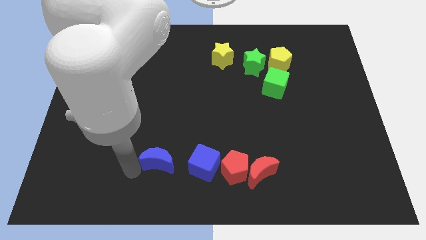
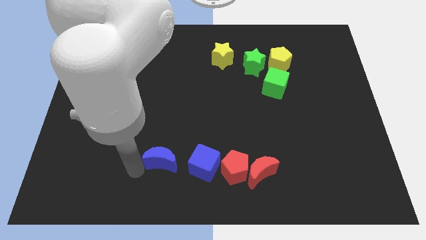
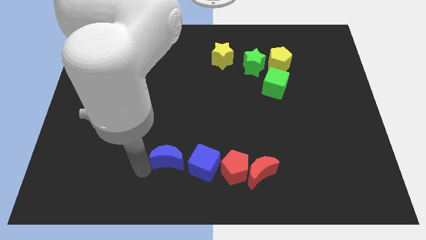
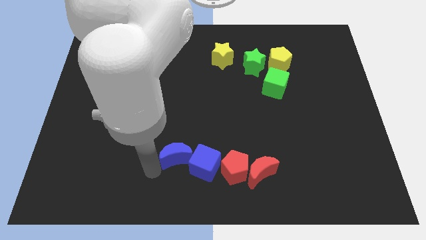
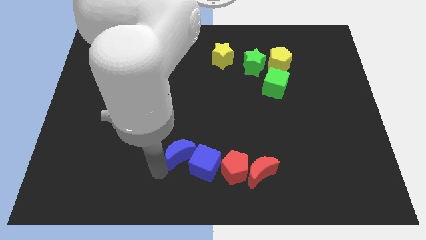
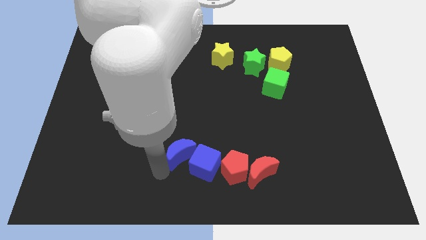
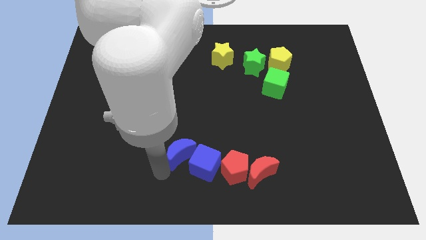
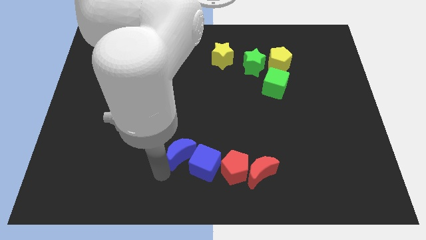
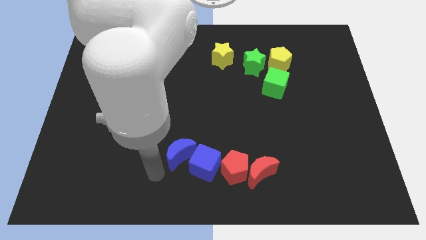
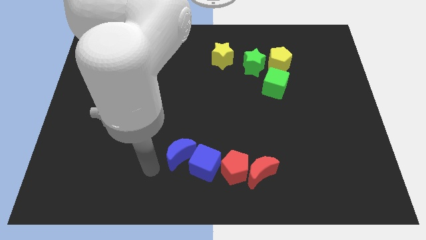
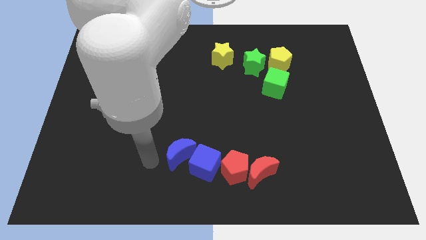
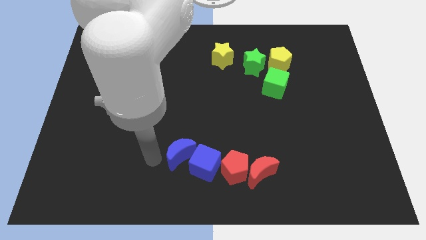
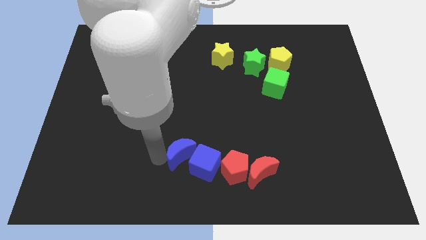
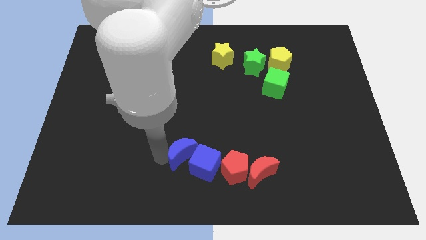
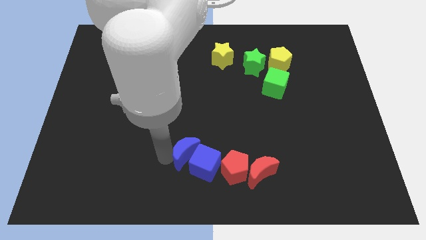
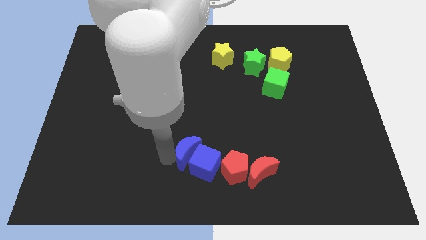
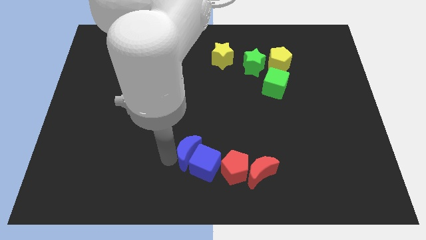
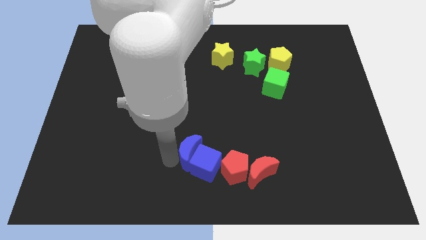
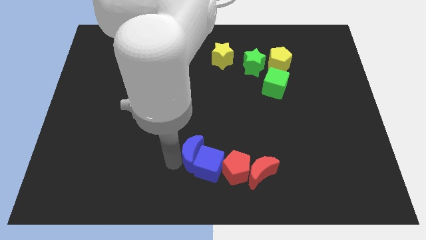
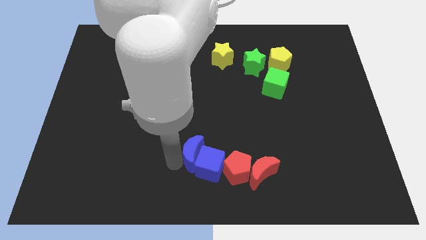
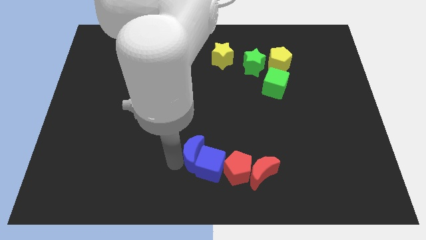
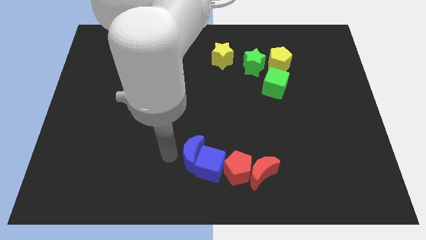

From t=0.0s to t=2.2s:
push the blue crescent into the blue cube

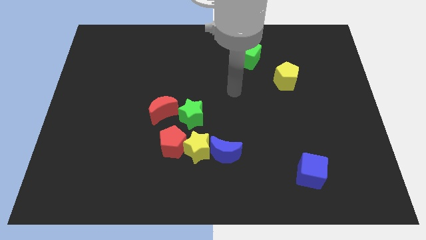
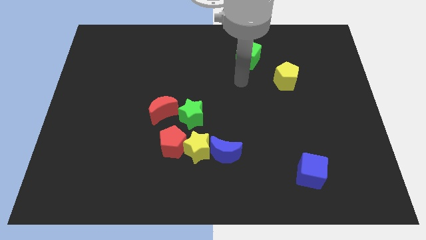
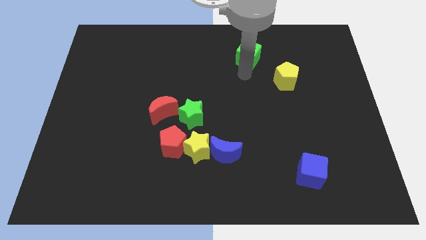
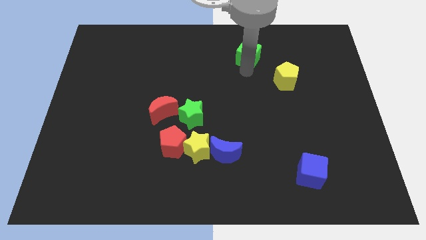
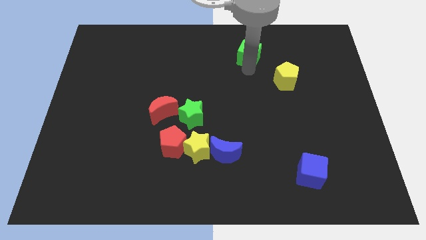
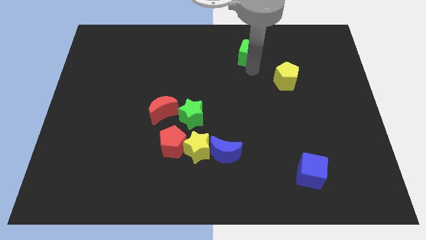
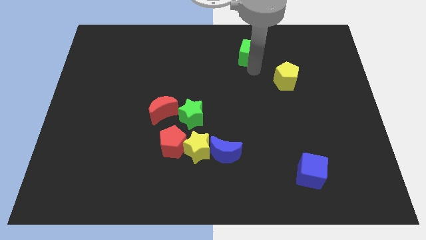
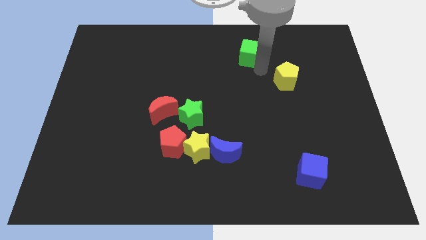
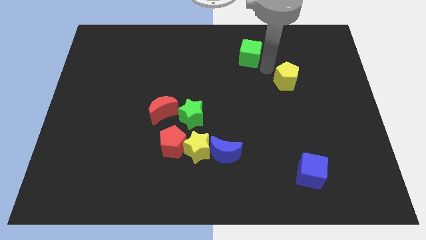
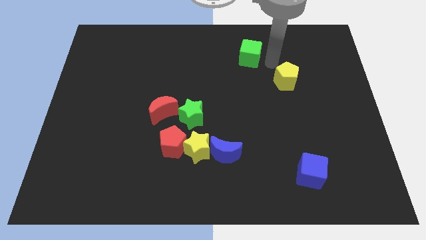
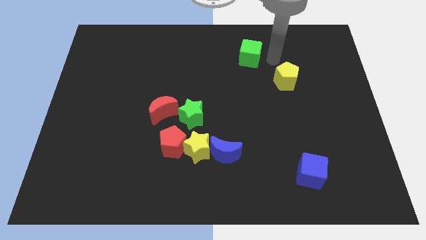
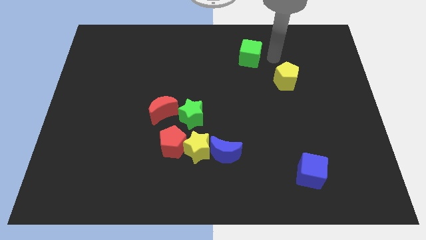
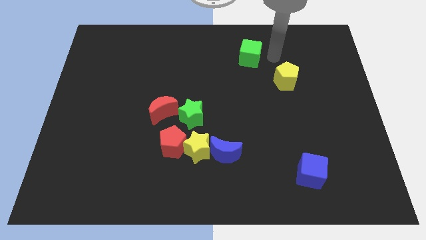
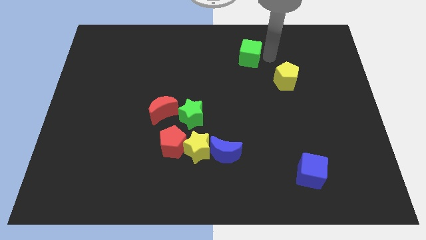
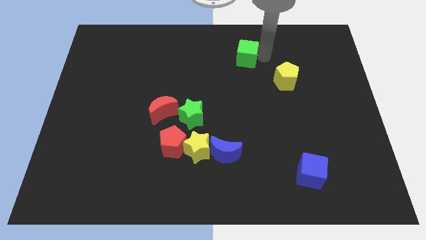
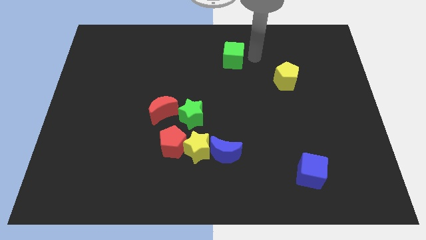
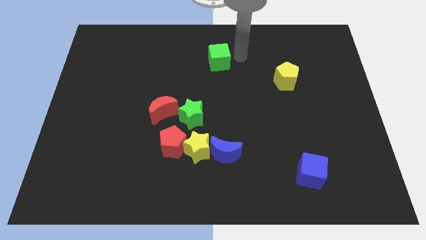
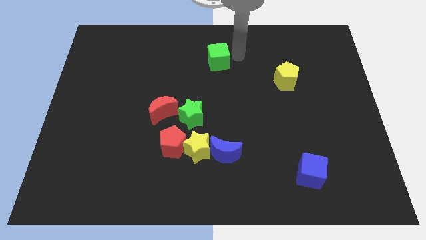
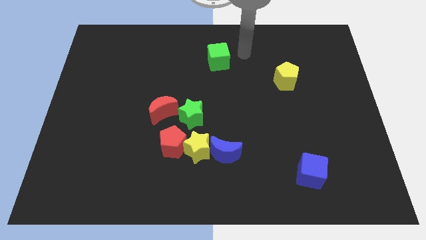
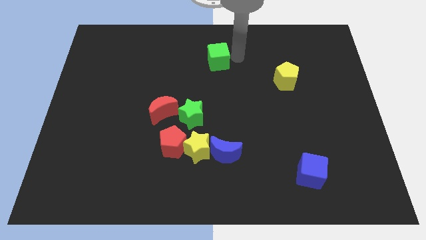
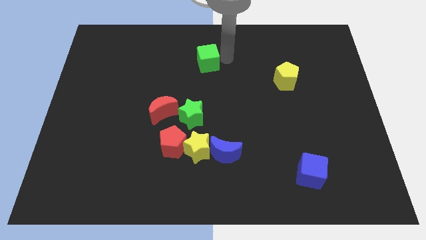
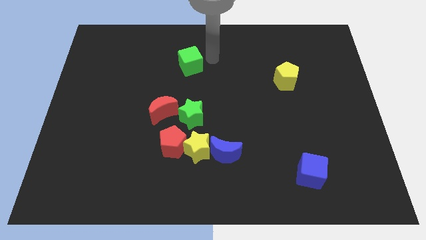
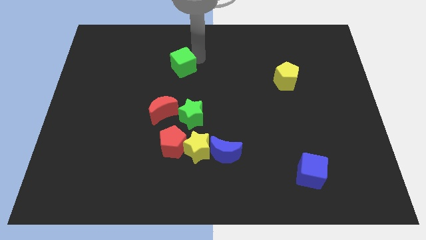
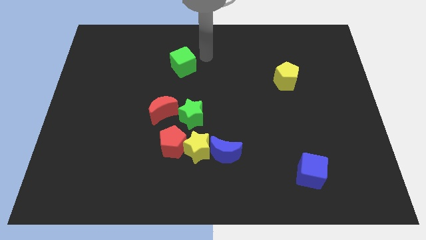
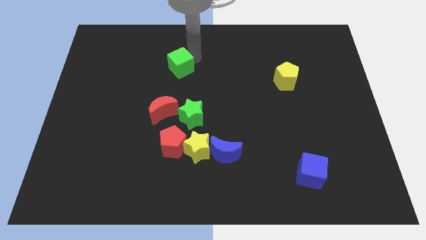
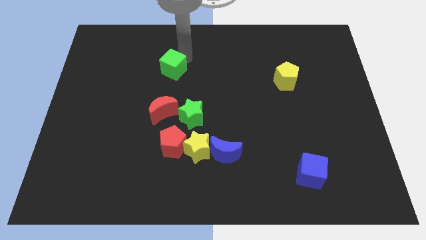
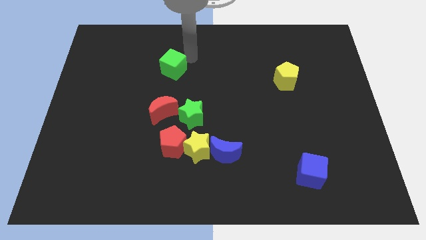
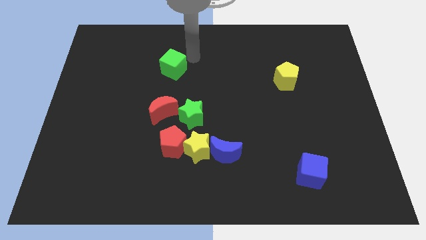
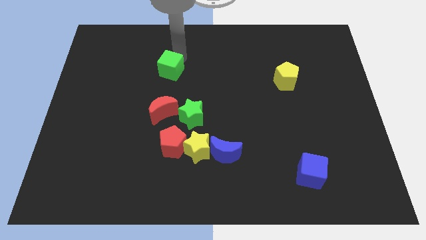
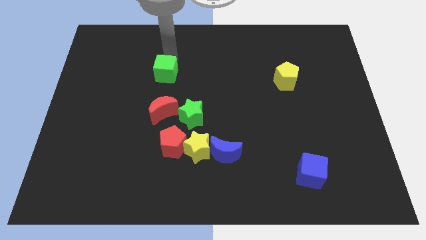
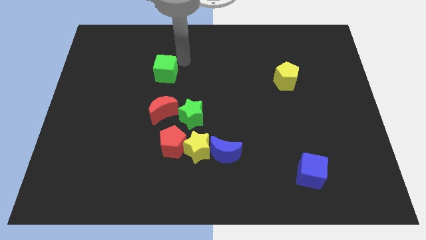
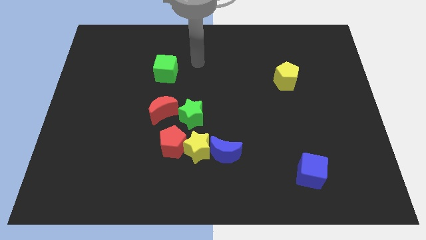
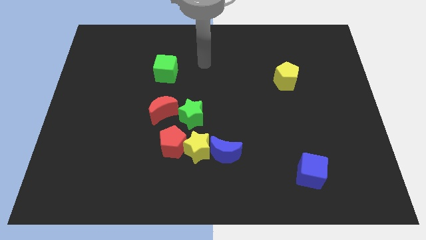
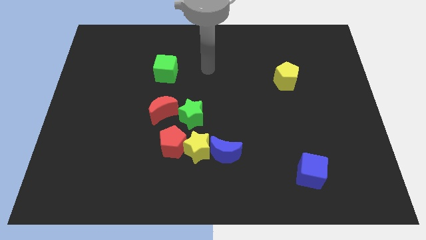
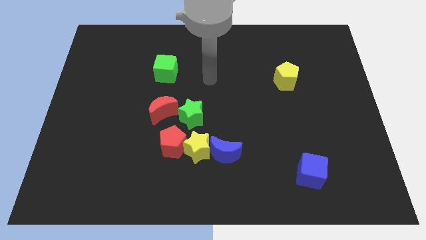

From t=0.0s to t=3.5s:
move green cube to the top of red crescent

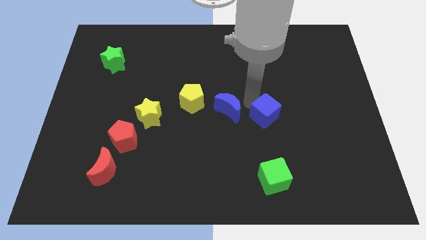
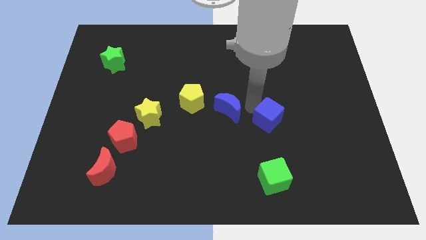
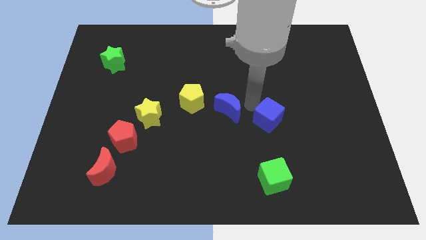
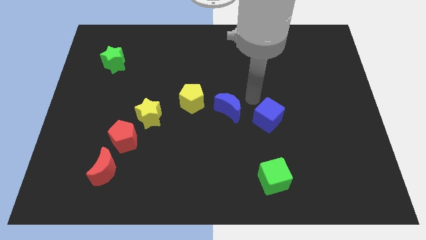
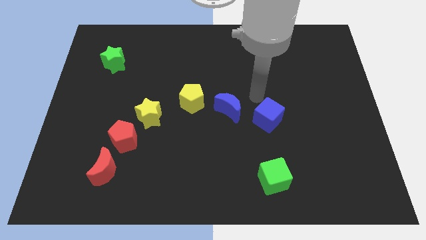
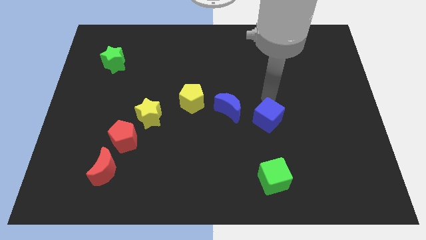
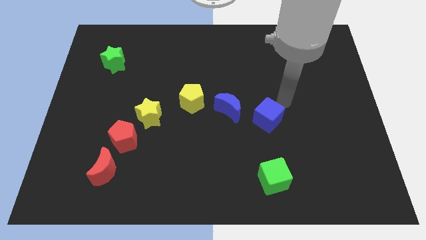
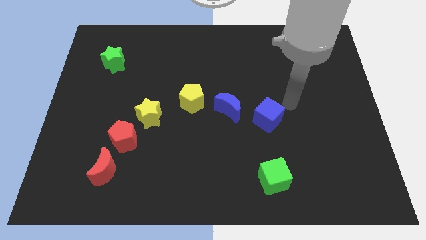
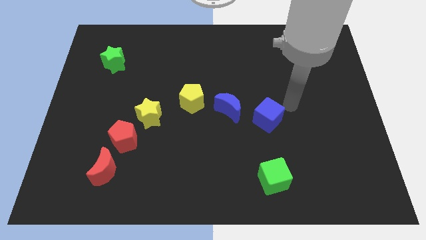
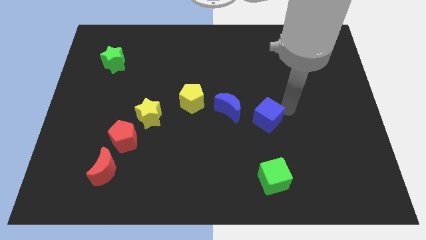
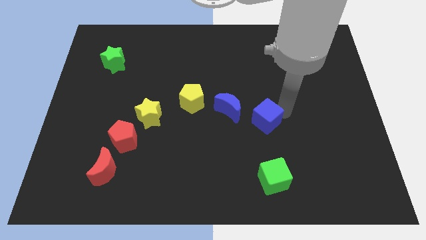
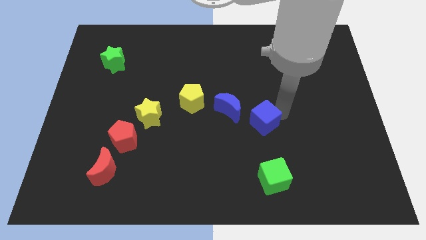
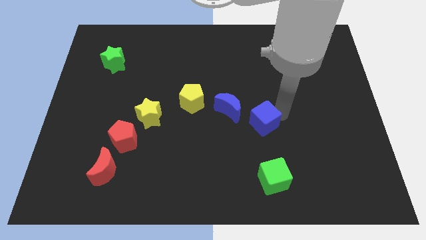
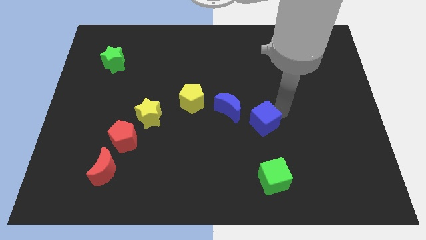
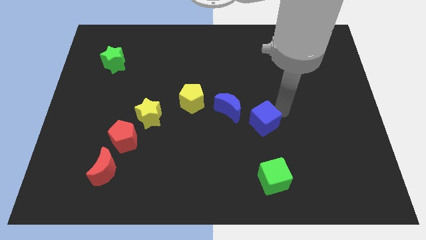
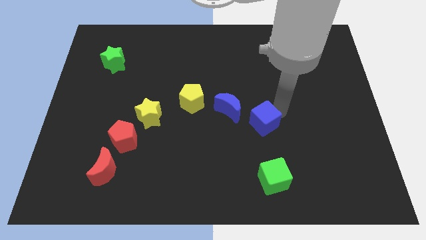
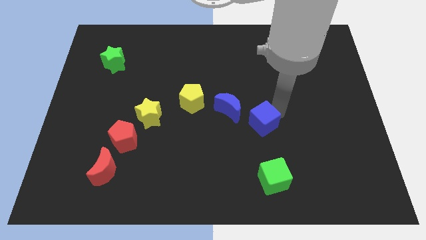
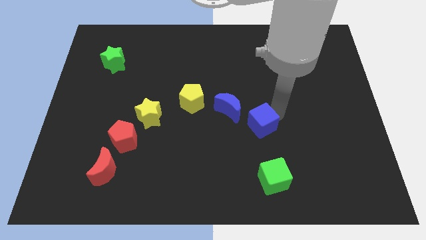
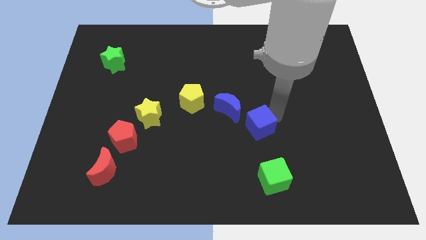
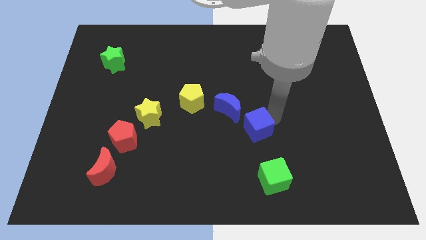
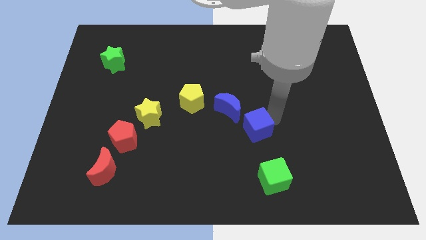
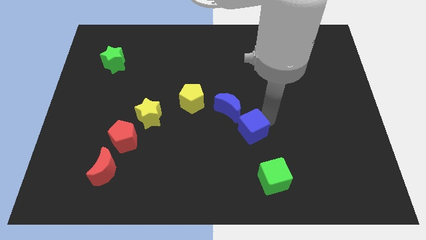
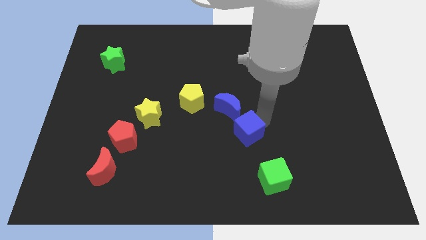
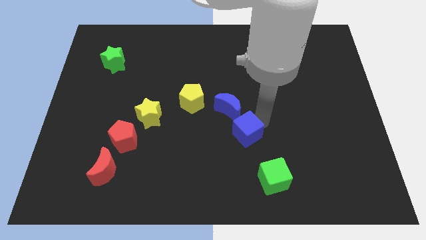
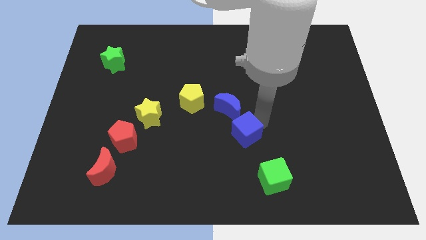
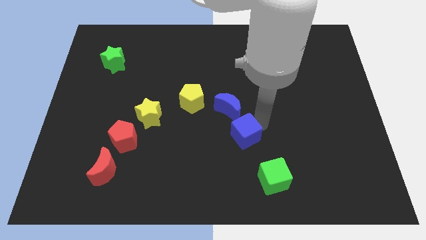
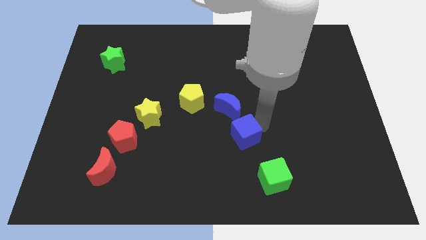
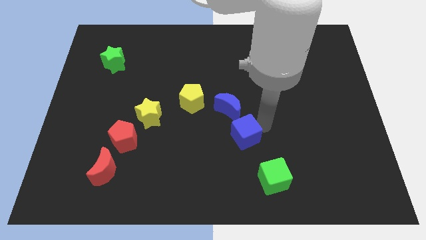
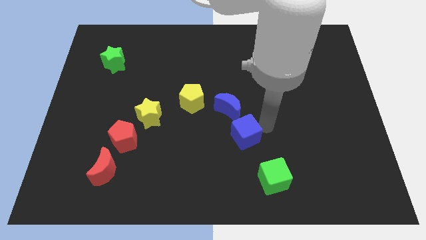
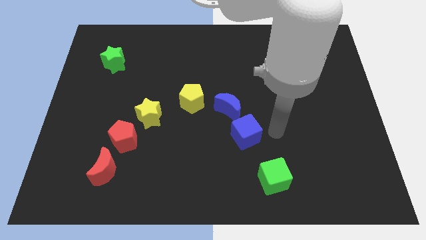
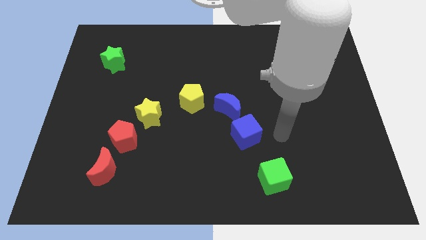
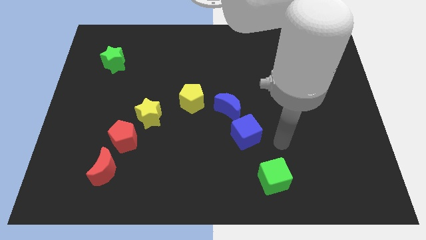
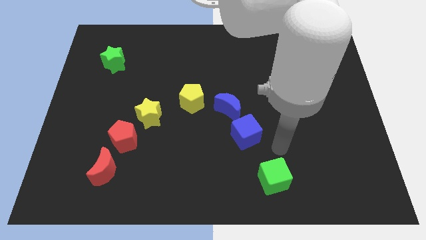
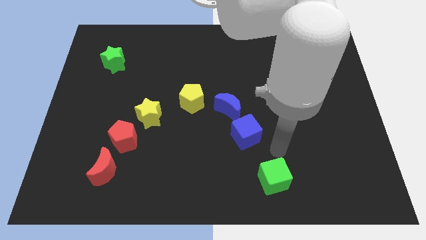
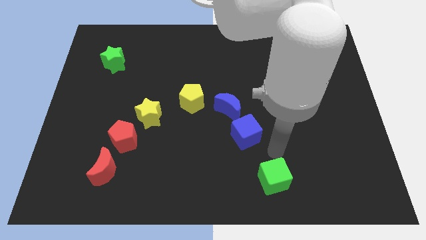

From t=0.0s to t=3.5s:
place the blue cube to the bottom right of blue crescent
